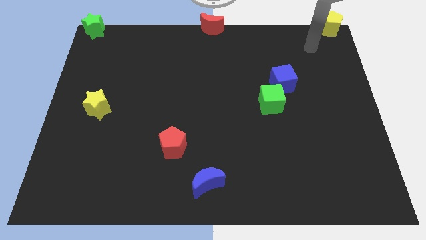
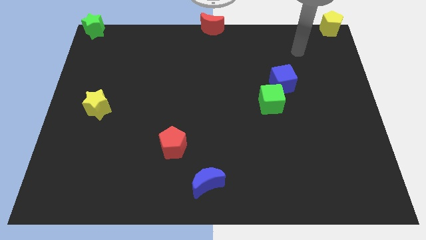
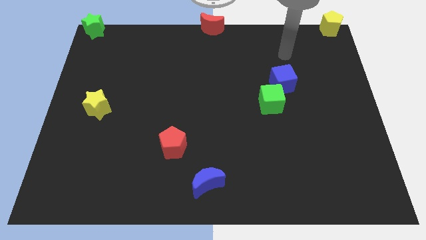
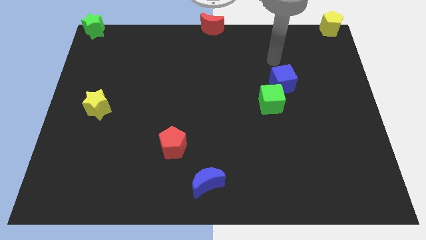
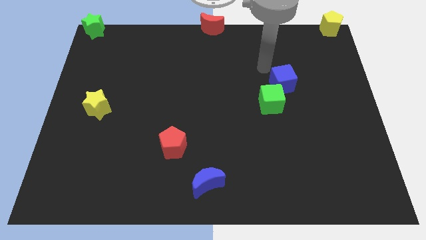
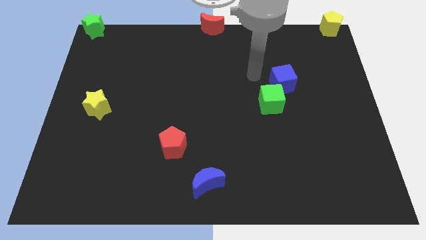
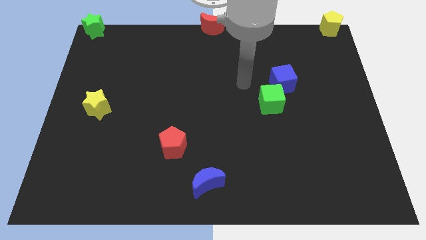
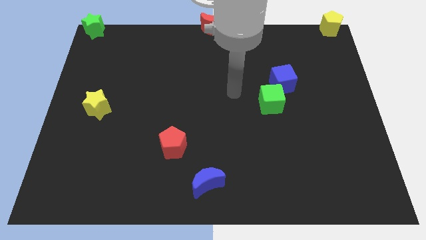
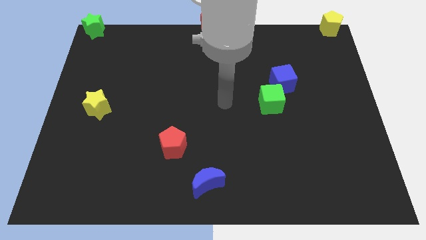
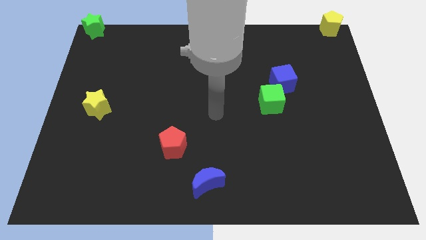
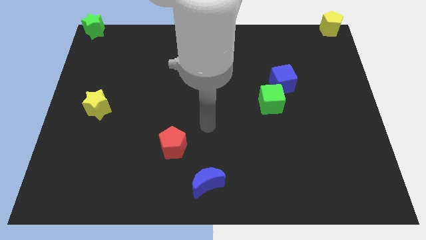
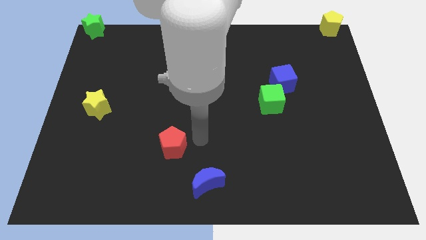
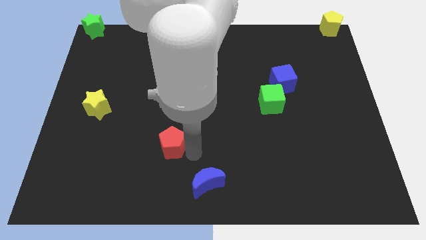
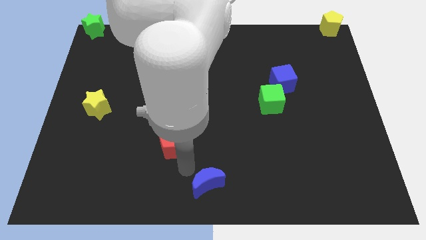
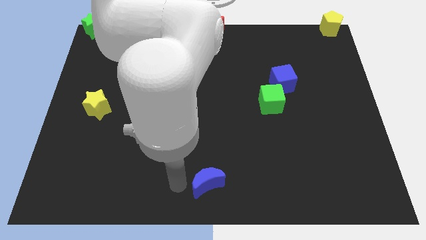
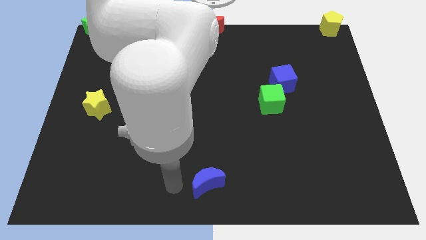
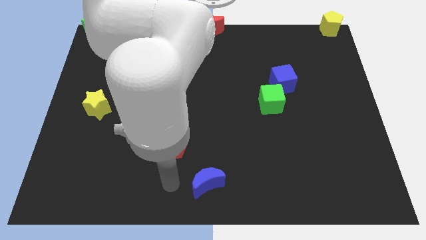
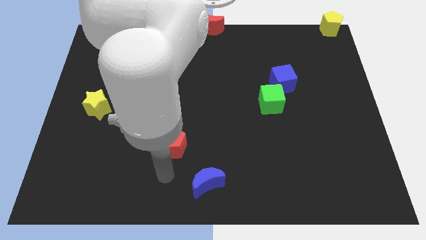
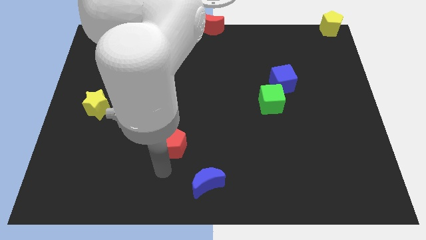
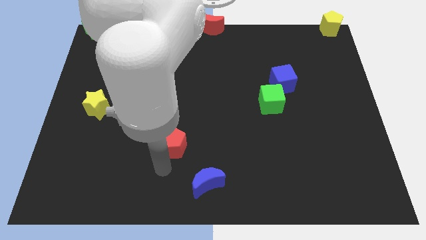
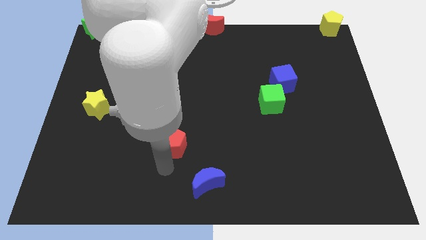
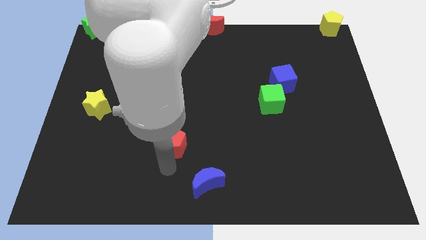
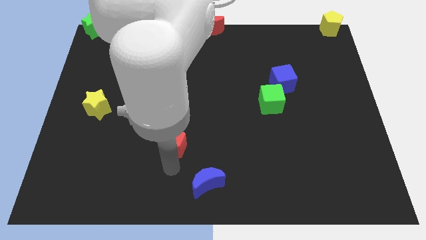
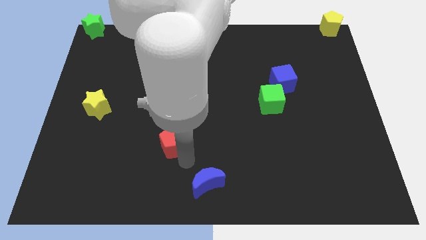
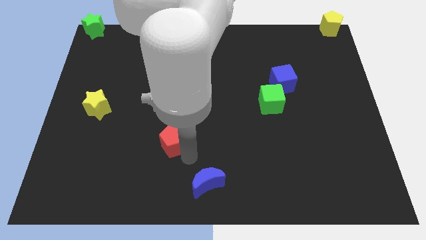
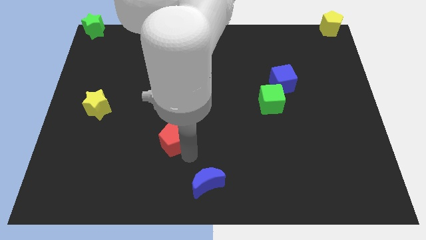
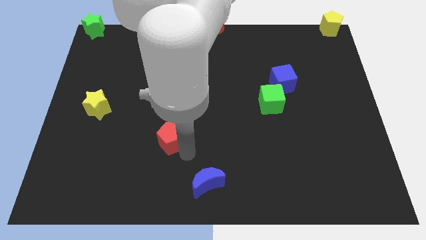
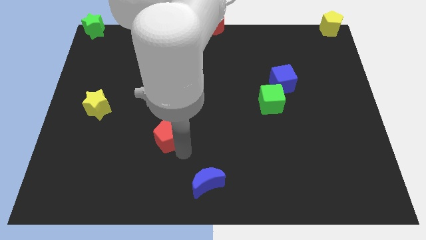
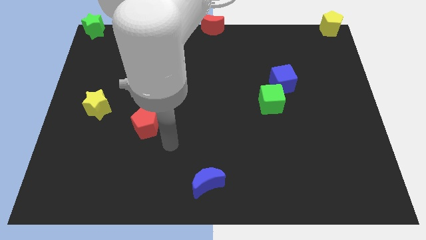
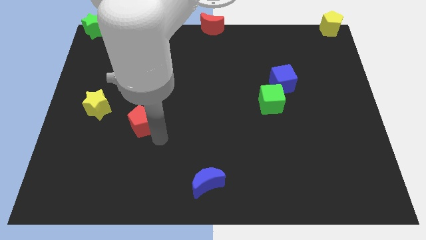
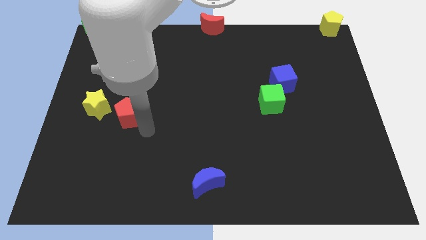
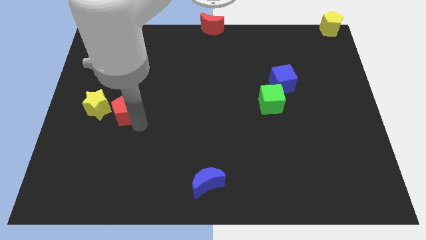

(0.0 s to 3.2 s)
move the red pentagon to the right of the yellow star

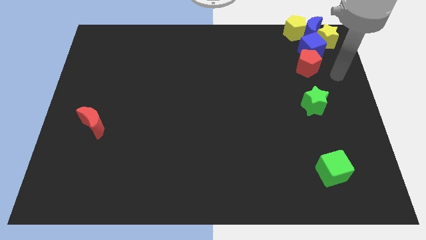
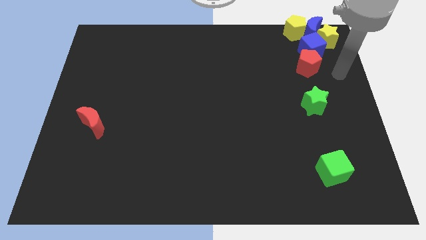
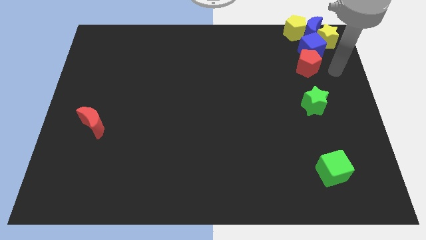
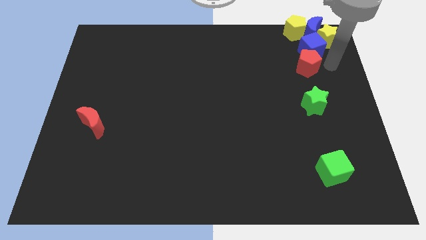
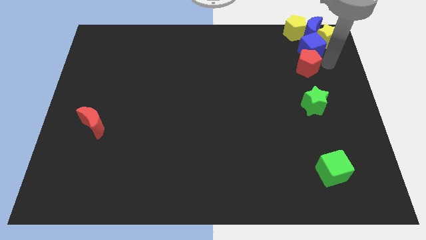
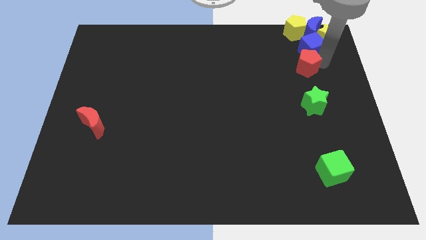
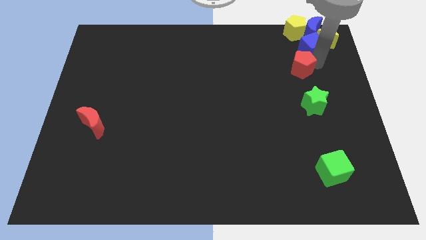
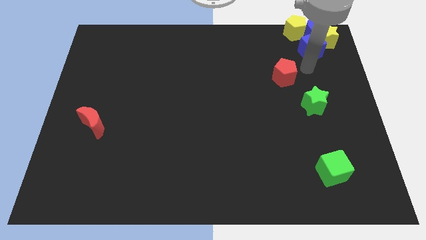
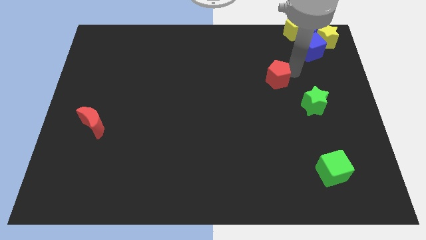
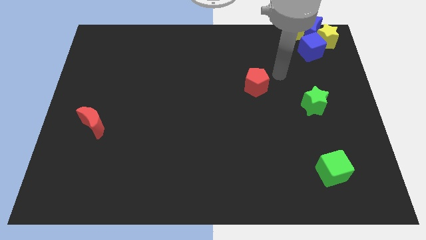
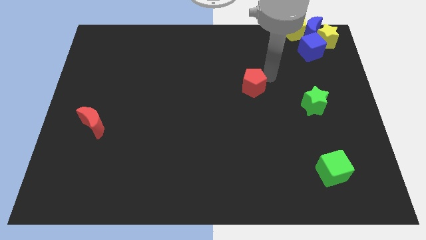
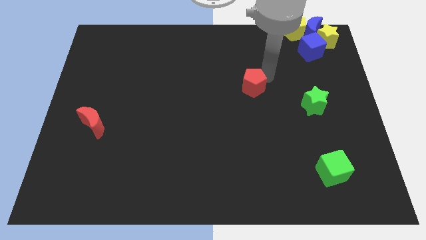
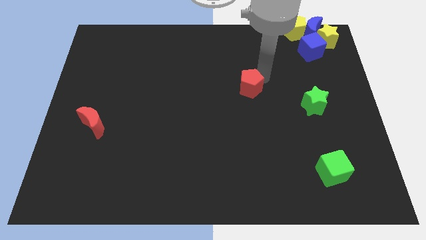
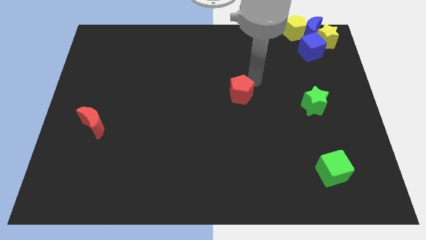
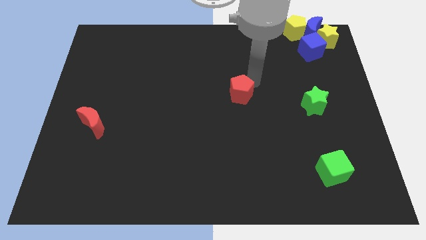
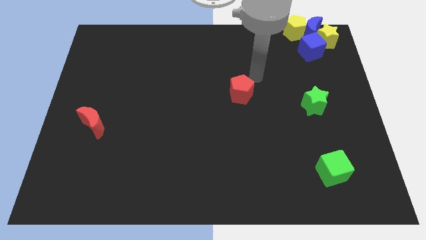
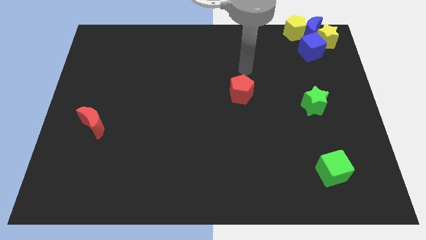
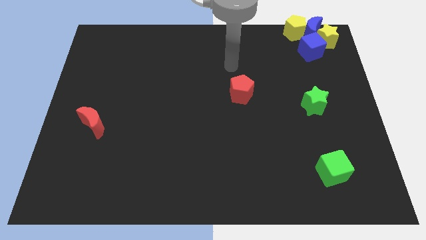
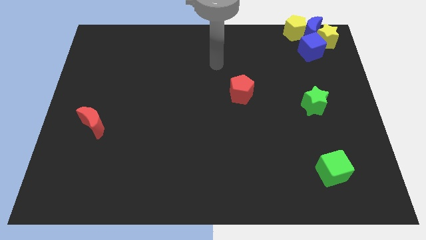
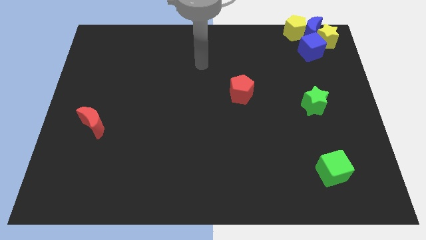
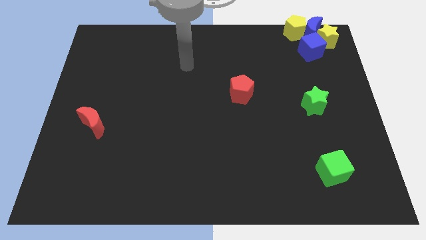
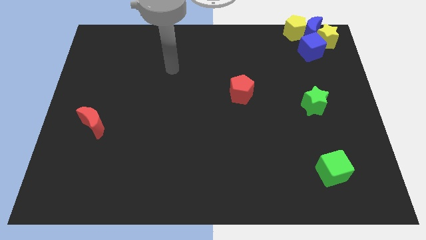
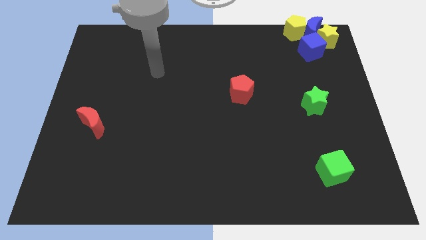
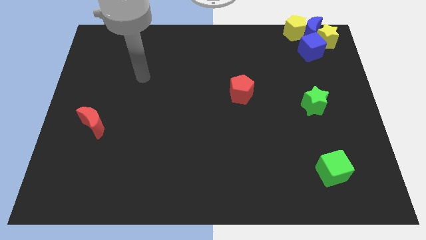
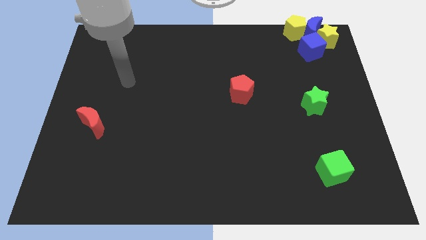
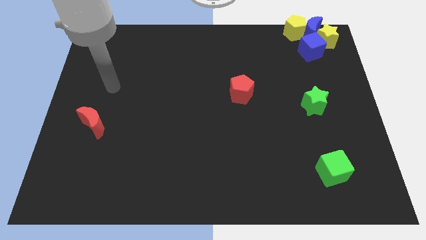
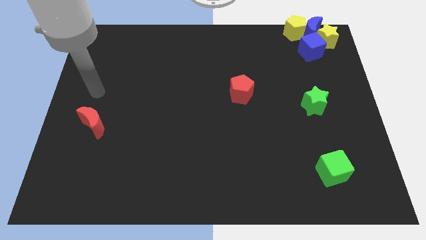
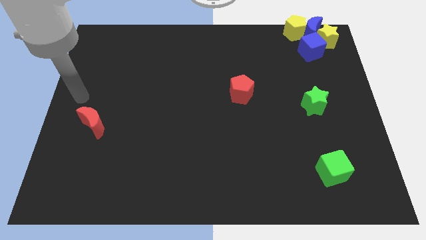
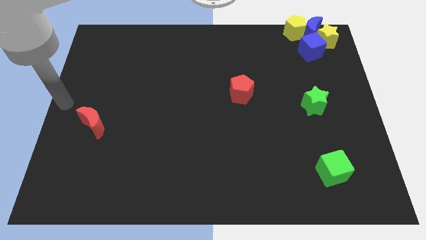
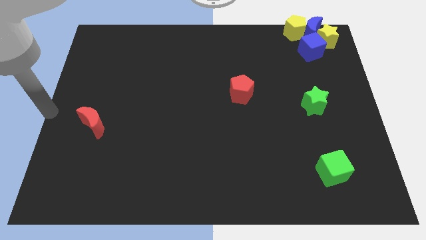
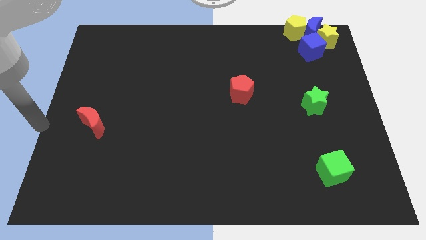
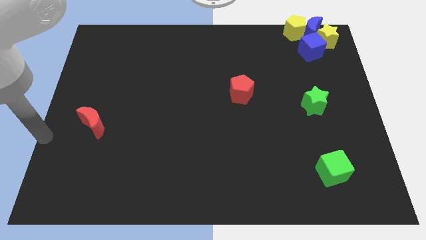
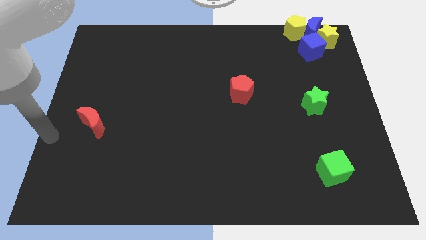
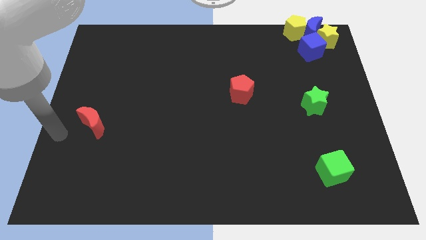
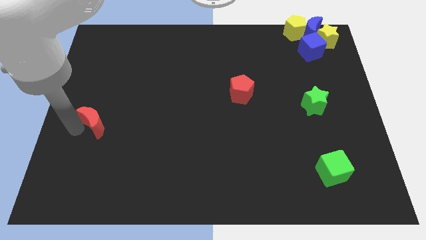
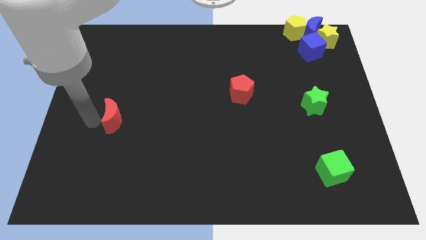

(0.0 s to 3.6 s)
place the arm to the left of the red moon

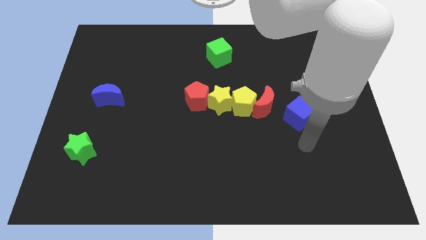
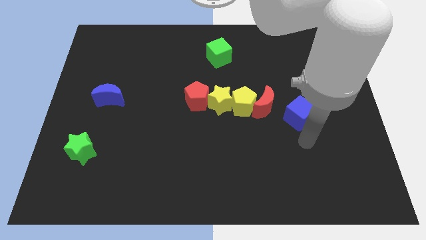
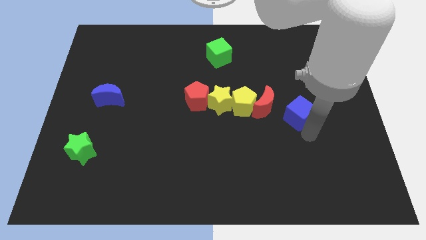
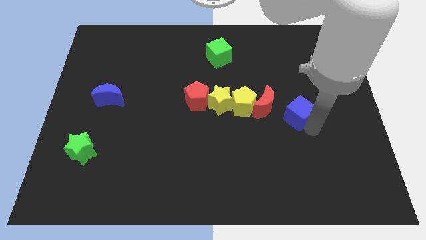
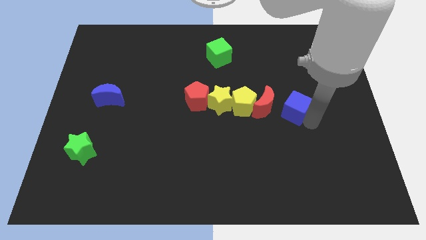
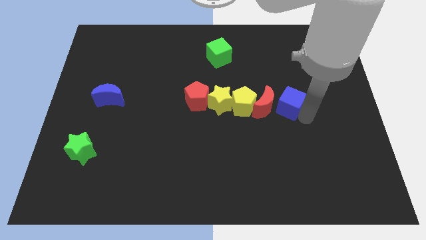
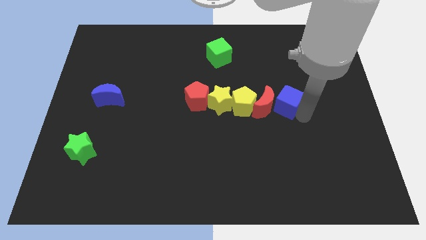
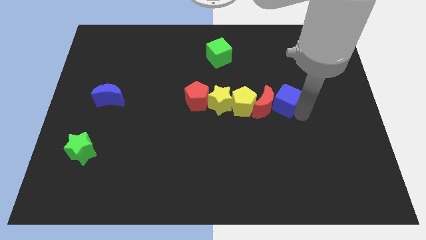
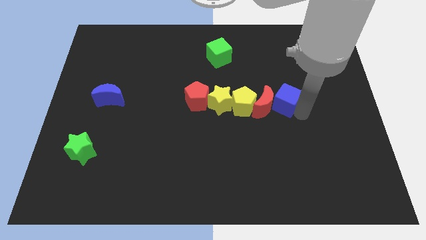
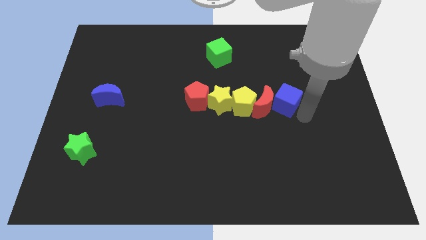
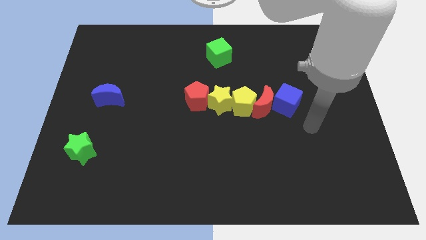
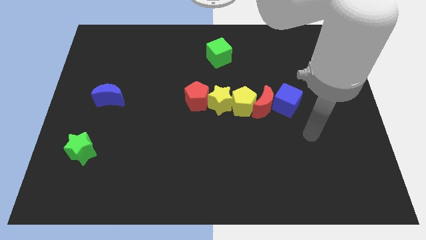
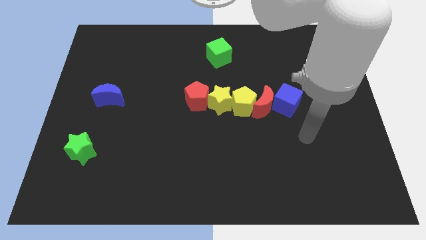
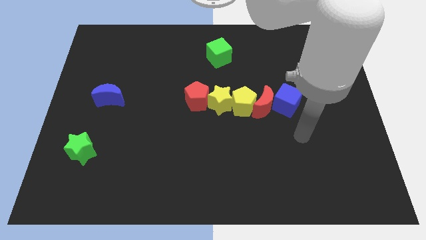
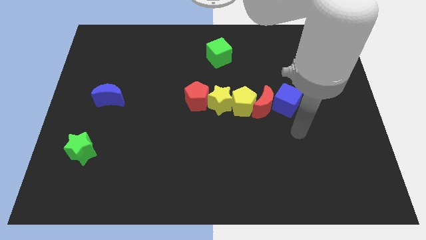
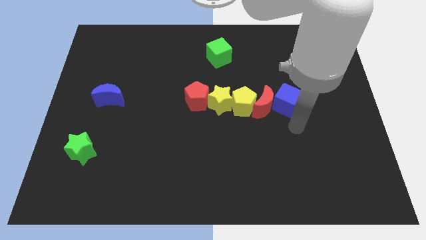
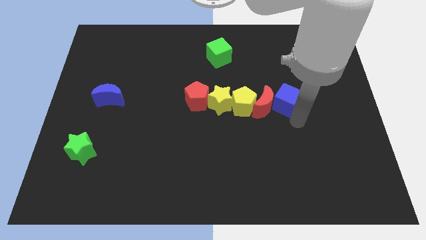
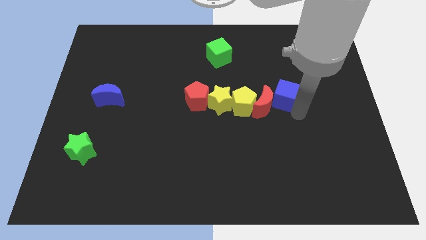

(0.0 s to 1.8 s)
move the blue cube into the red crescent

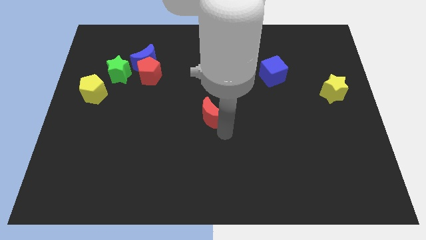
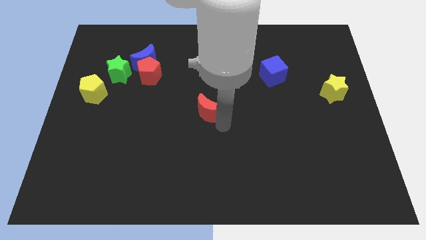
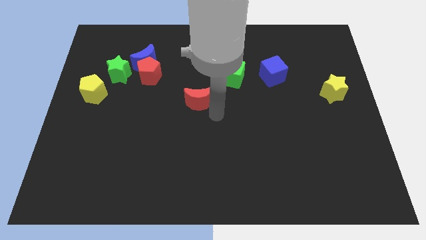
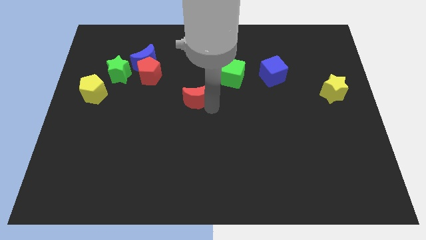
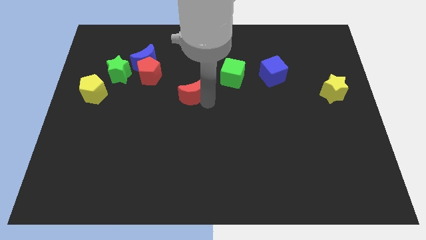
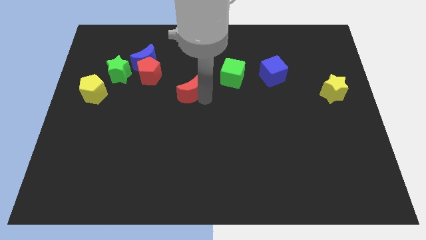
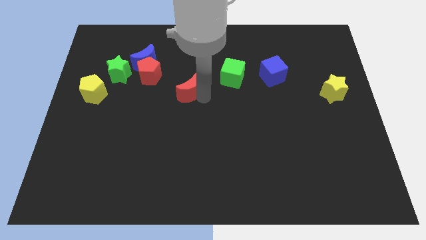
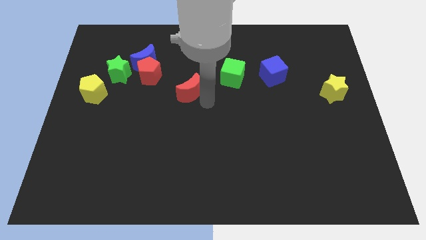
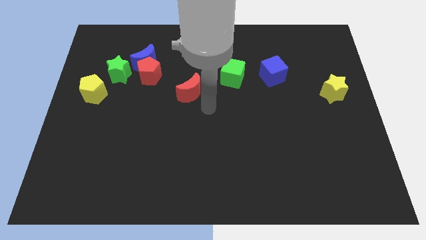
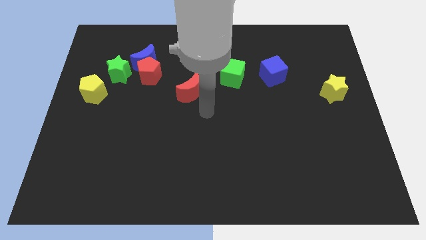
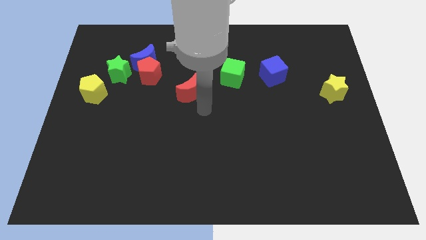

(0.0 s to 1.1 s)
push red moon towards red pentagon
